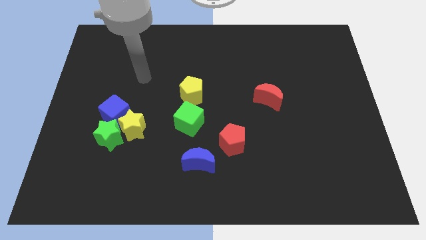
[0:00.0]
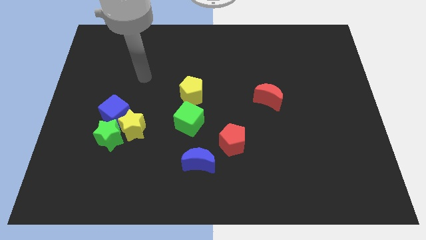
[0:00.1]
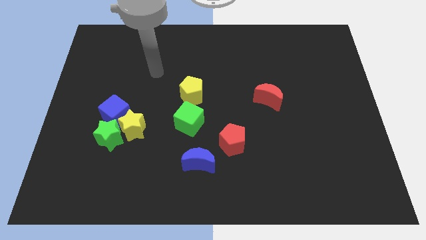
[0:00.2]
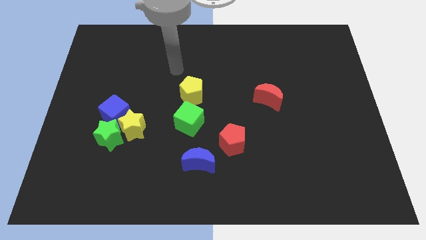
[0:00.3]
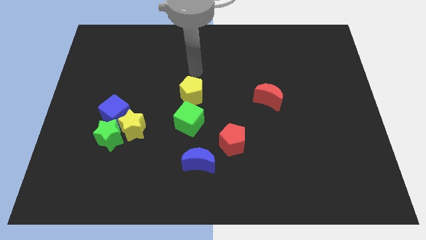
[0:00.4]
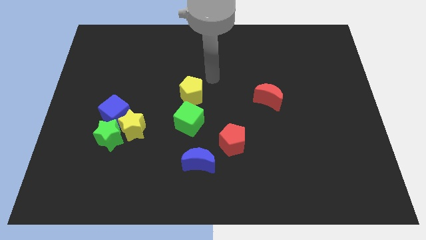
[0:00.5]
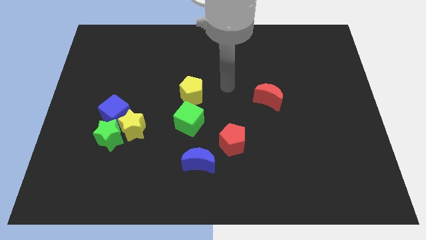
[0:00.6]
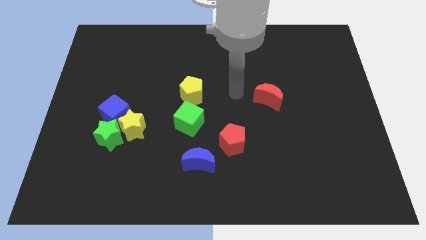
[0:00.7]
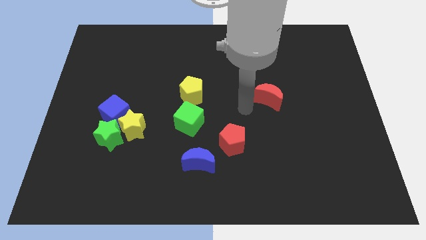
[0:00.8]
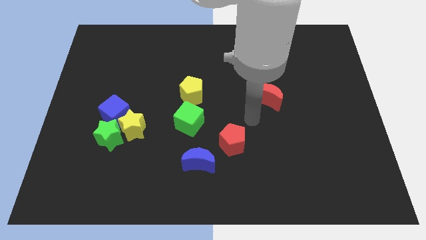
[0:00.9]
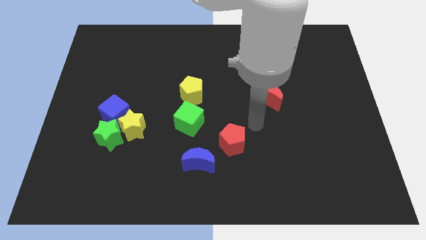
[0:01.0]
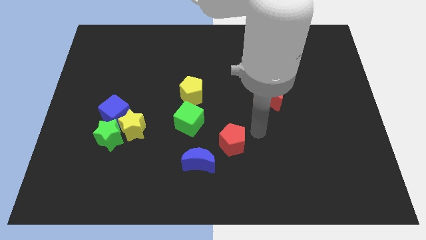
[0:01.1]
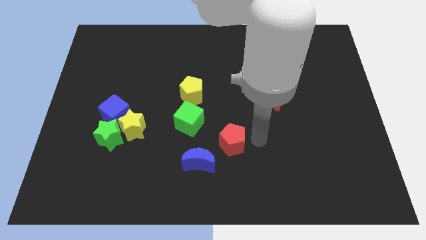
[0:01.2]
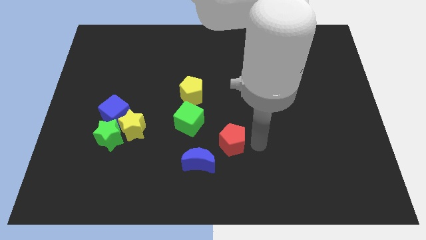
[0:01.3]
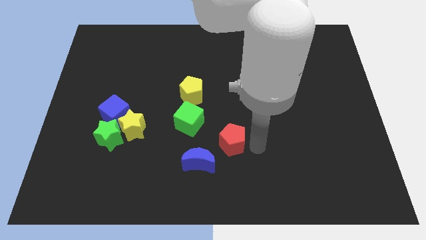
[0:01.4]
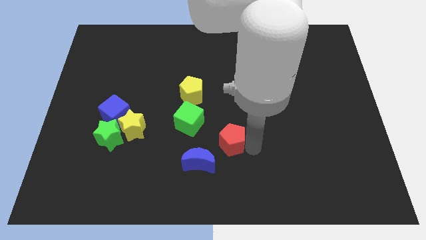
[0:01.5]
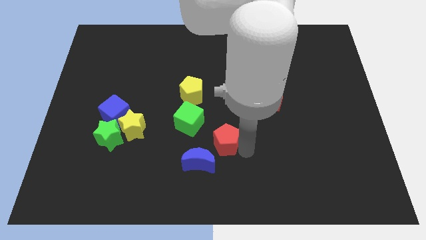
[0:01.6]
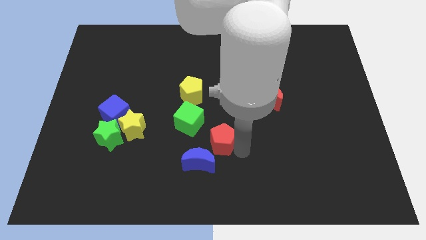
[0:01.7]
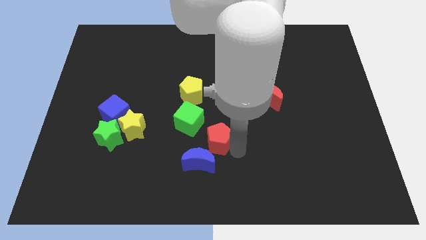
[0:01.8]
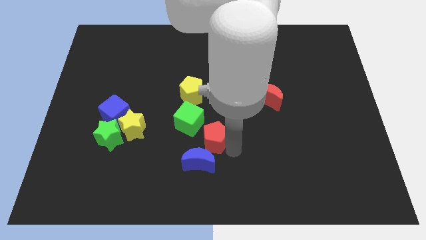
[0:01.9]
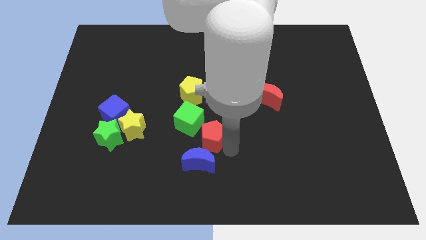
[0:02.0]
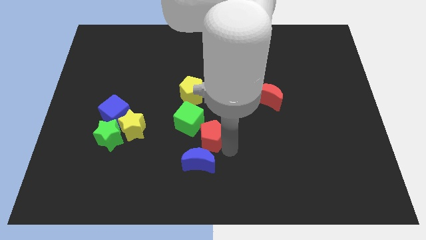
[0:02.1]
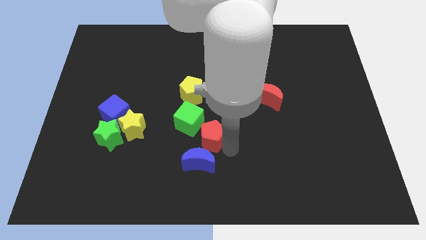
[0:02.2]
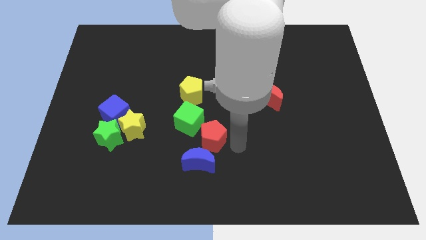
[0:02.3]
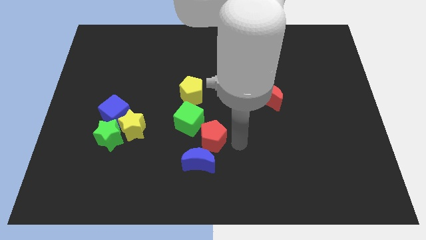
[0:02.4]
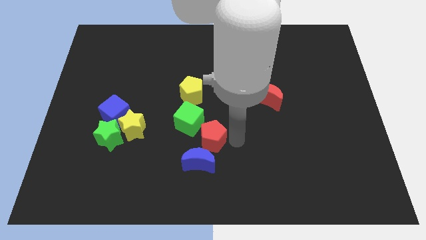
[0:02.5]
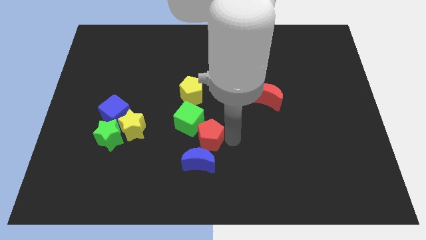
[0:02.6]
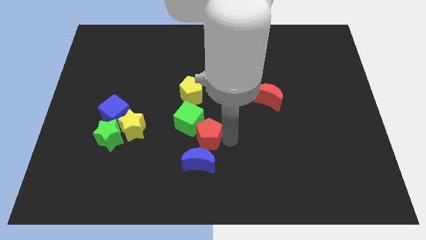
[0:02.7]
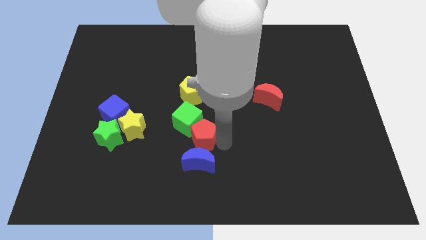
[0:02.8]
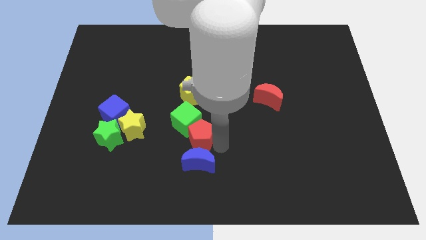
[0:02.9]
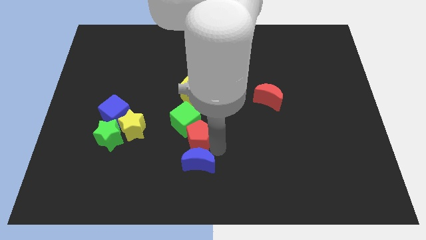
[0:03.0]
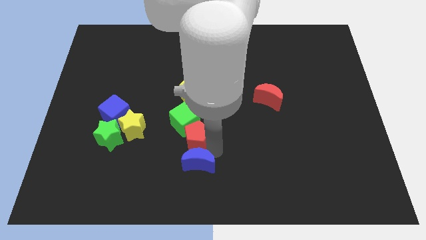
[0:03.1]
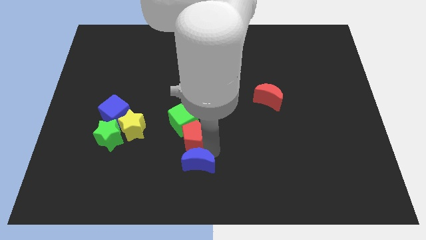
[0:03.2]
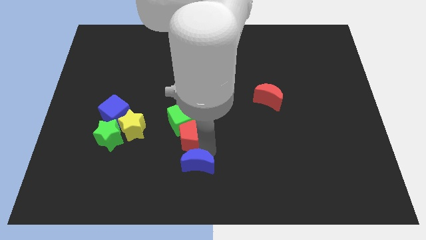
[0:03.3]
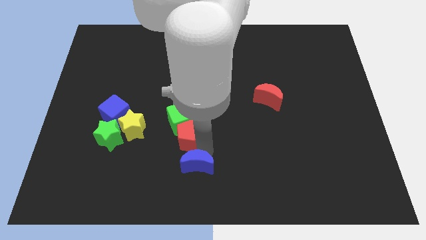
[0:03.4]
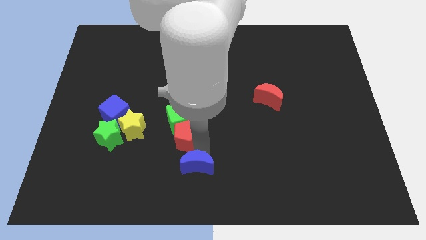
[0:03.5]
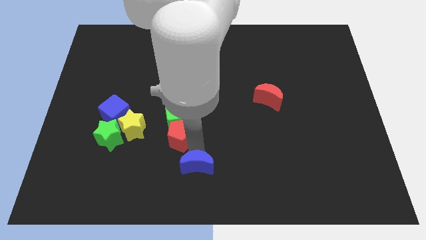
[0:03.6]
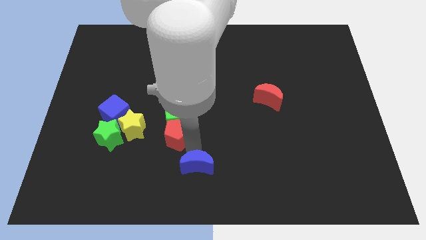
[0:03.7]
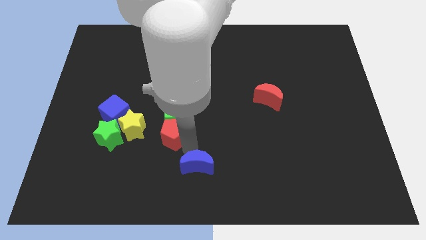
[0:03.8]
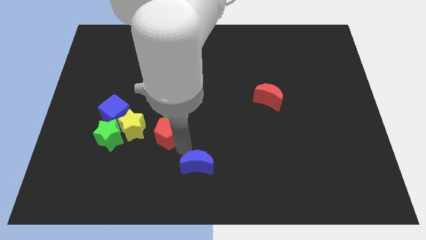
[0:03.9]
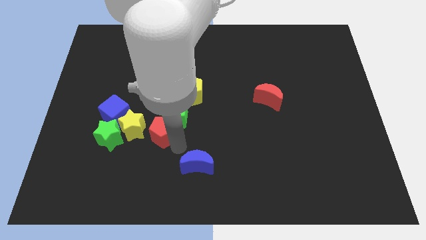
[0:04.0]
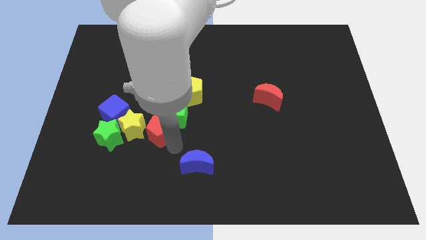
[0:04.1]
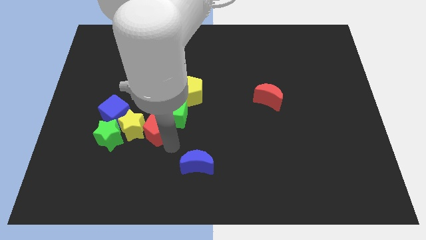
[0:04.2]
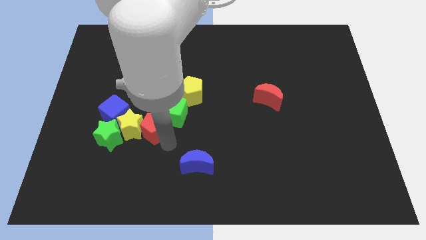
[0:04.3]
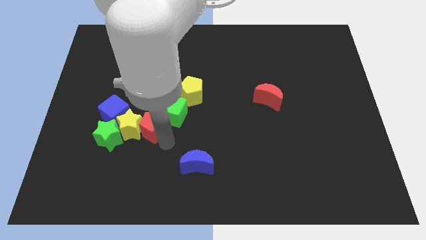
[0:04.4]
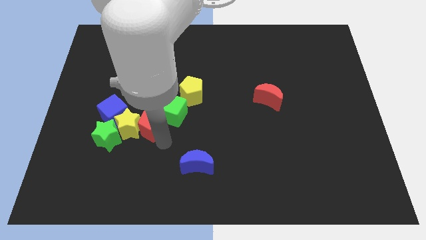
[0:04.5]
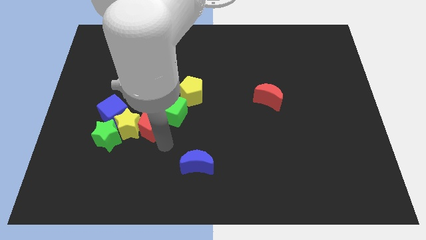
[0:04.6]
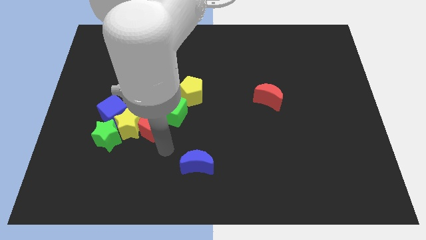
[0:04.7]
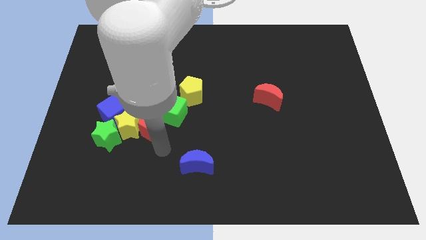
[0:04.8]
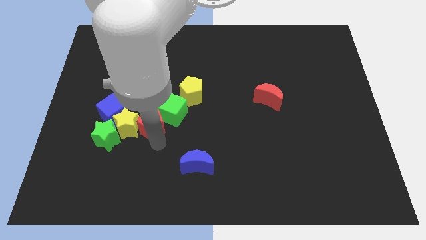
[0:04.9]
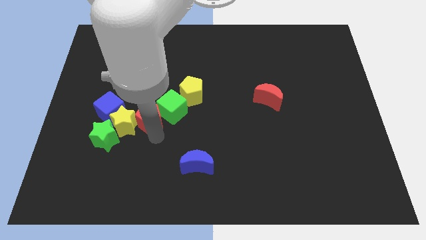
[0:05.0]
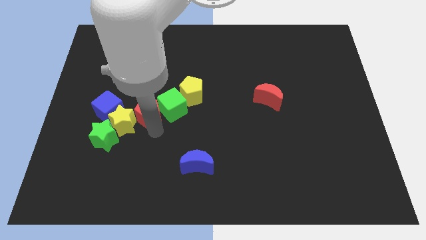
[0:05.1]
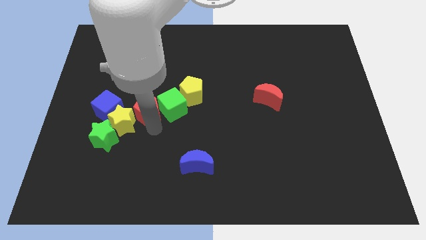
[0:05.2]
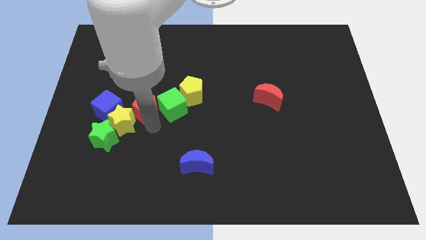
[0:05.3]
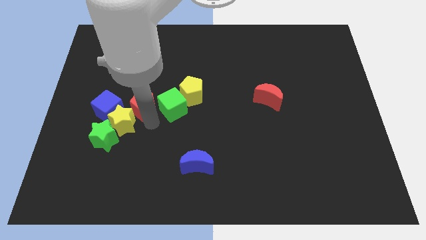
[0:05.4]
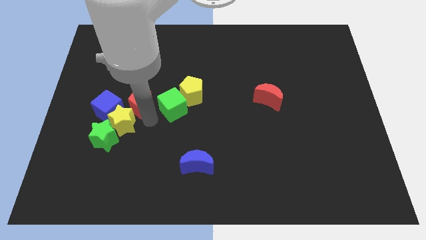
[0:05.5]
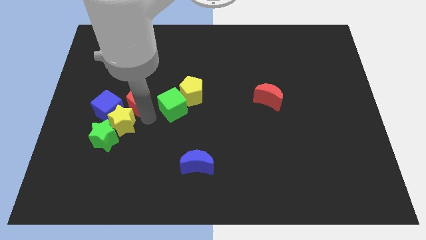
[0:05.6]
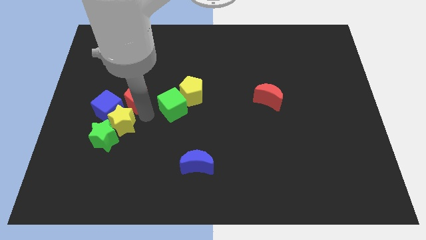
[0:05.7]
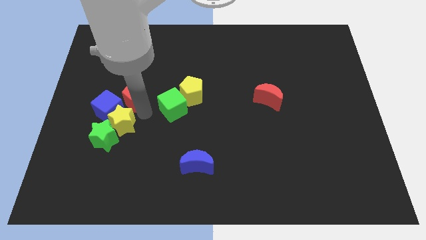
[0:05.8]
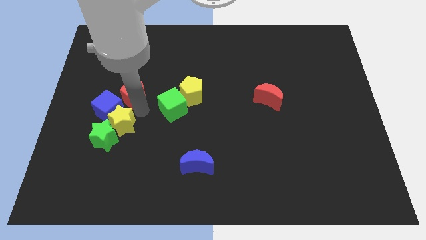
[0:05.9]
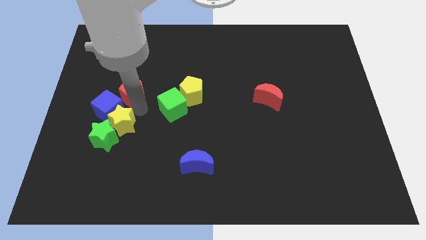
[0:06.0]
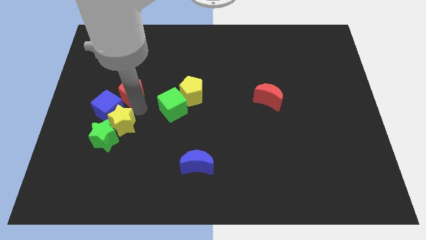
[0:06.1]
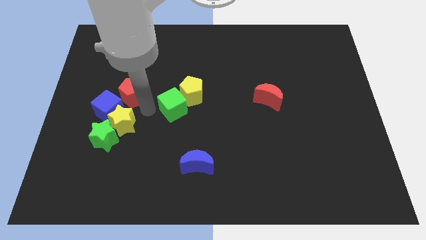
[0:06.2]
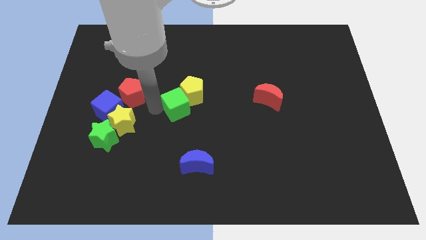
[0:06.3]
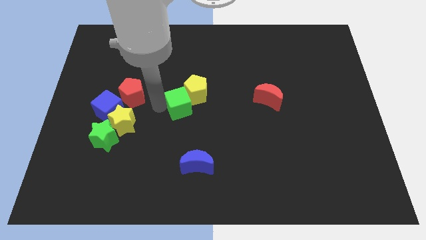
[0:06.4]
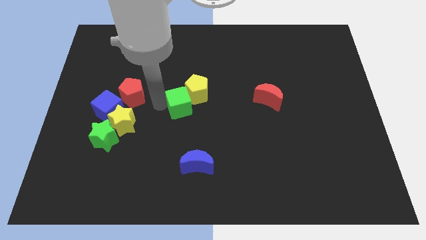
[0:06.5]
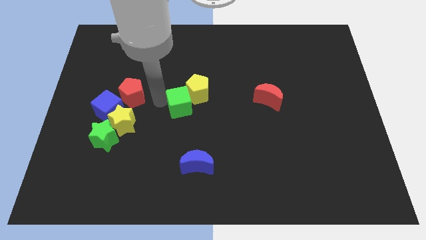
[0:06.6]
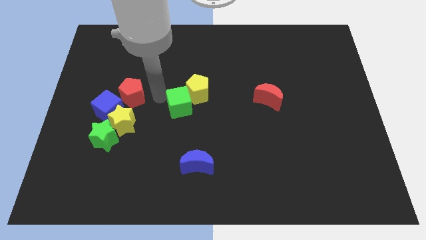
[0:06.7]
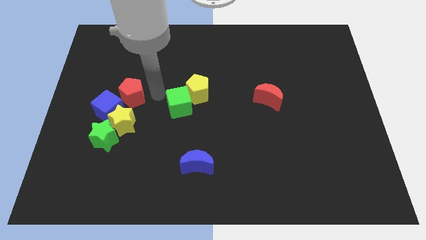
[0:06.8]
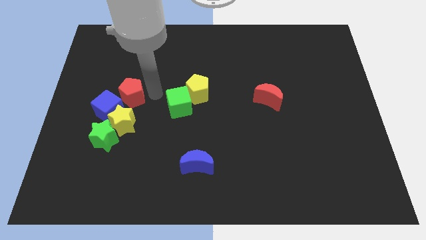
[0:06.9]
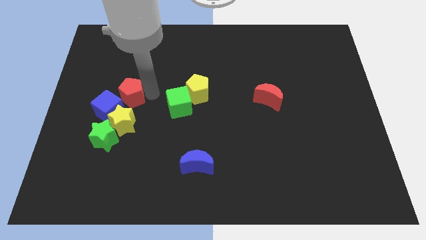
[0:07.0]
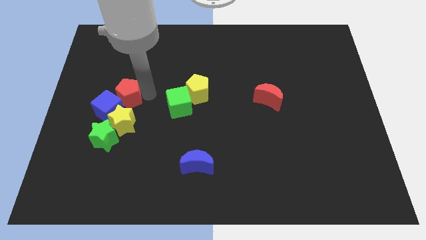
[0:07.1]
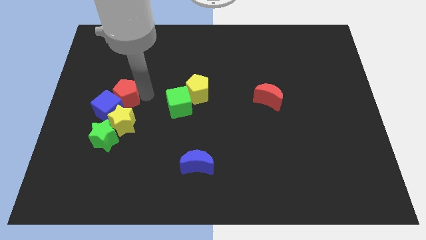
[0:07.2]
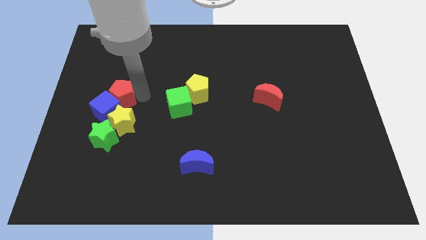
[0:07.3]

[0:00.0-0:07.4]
move the red pentagon close to the blue cube

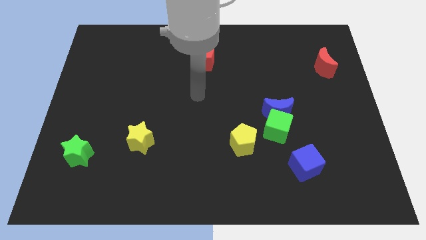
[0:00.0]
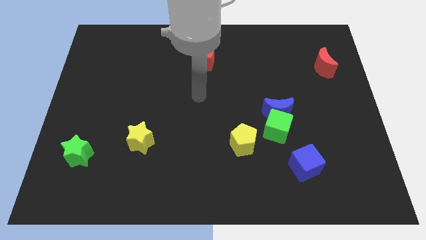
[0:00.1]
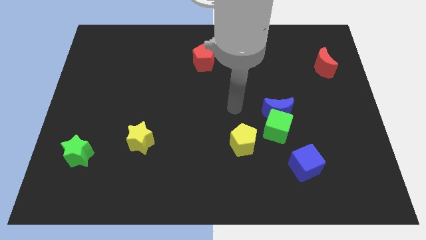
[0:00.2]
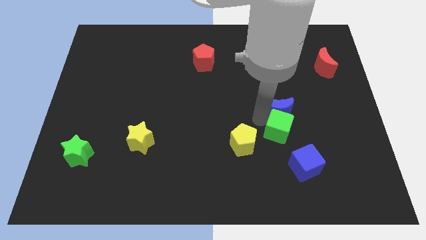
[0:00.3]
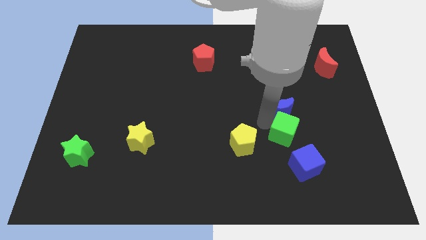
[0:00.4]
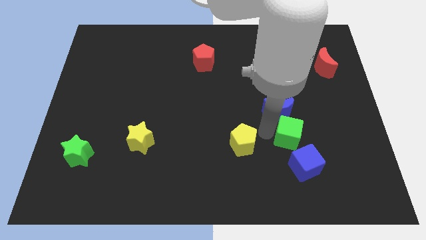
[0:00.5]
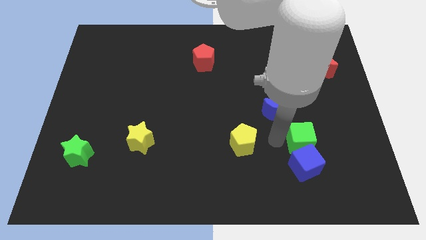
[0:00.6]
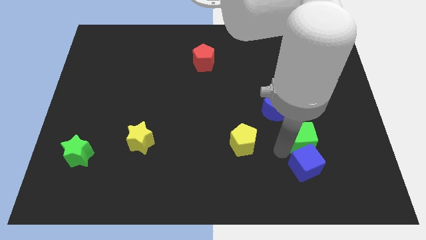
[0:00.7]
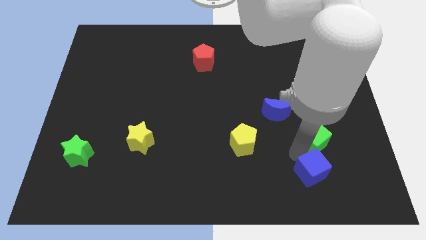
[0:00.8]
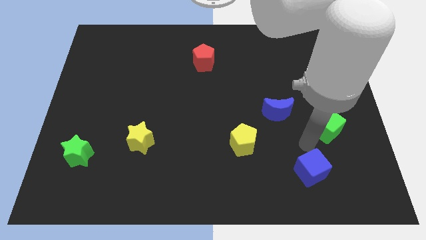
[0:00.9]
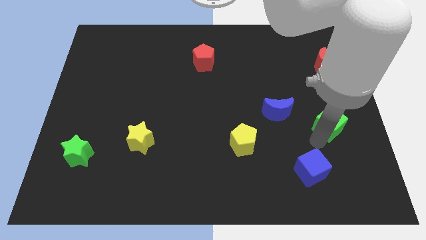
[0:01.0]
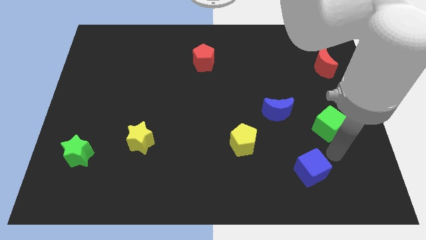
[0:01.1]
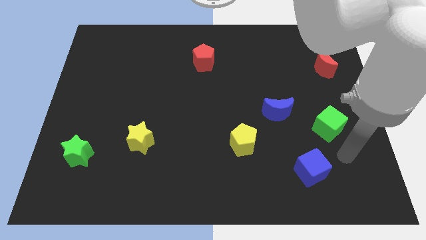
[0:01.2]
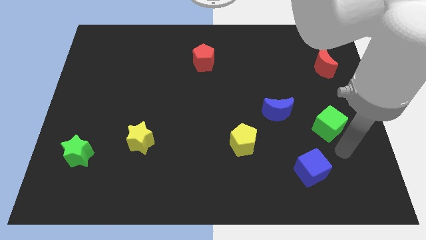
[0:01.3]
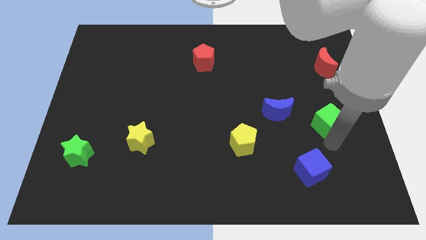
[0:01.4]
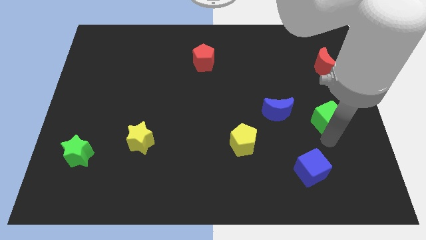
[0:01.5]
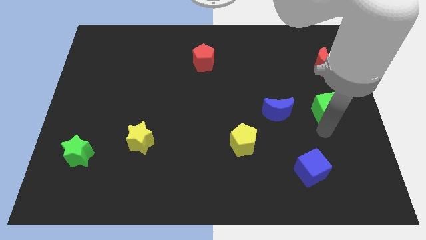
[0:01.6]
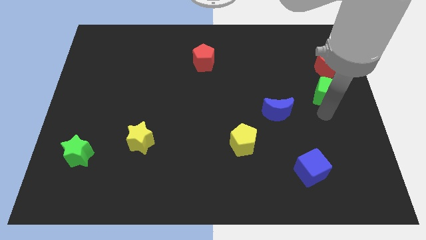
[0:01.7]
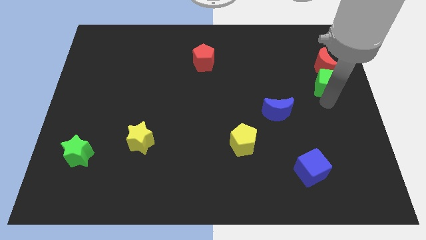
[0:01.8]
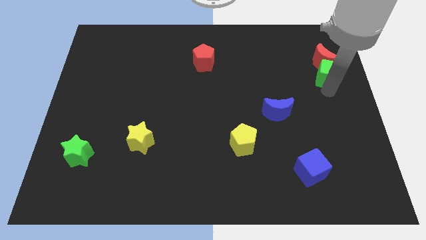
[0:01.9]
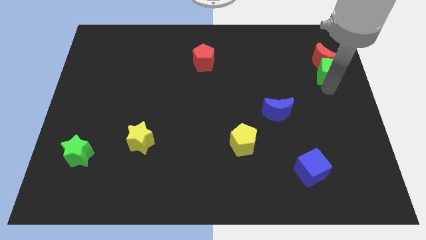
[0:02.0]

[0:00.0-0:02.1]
push the green cube close to the red moon
